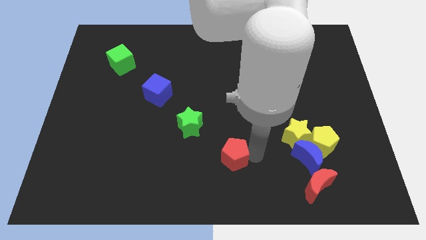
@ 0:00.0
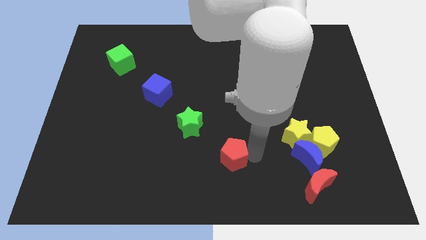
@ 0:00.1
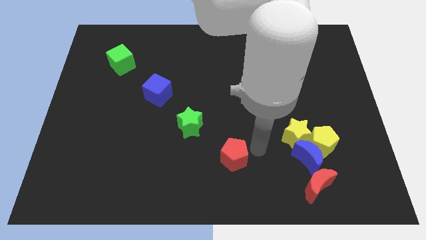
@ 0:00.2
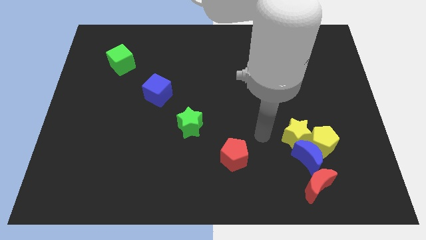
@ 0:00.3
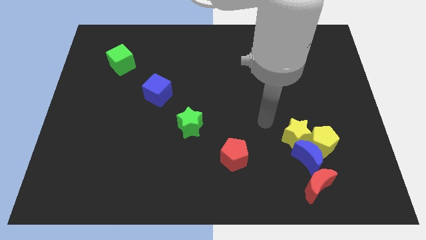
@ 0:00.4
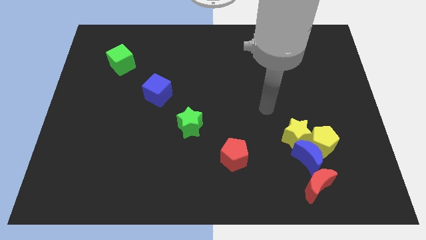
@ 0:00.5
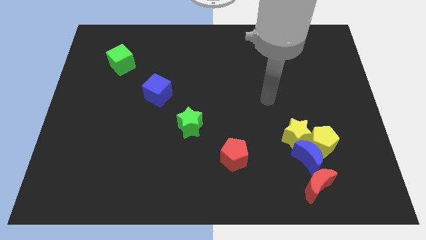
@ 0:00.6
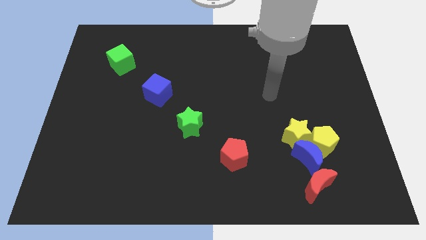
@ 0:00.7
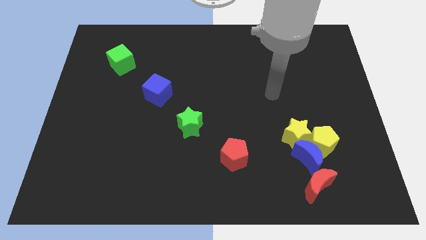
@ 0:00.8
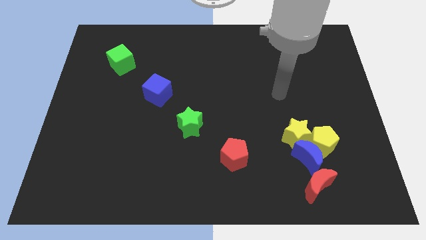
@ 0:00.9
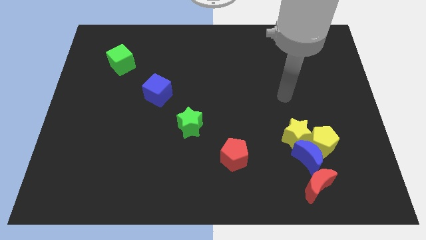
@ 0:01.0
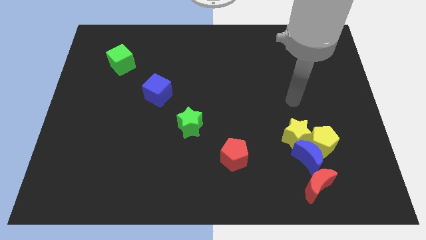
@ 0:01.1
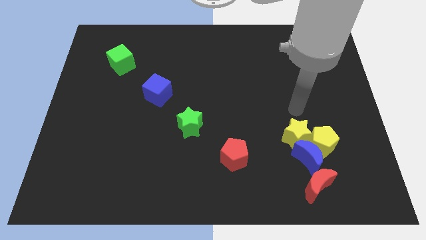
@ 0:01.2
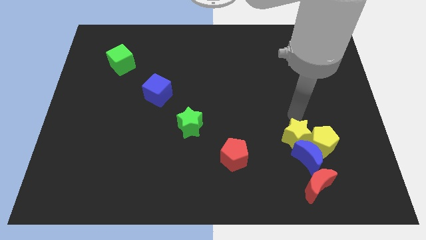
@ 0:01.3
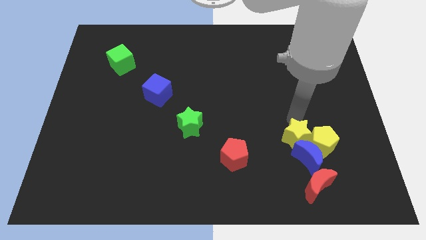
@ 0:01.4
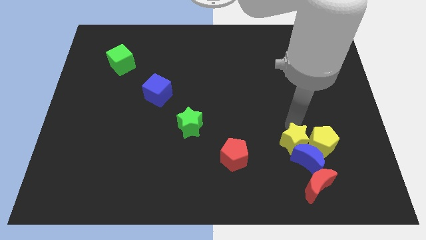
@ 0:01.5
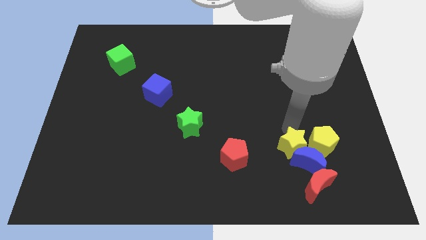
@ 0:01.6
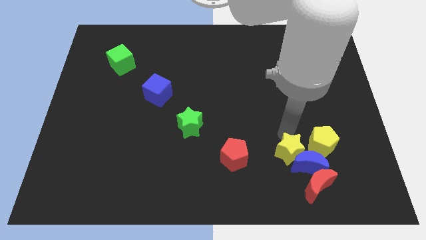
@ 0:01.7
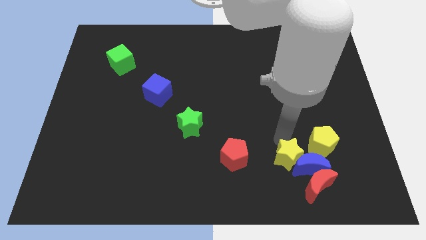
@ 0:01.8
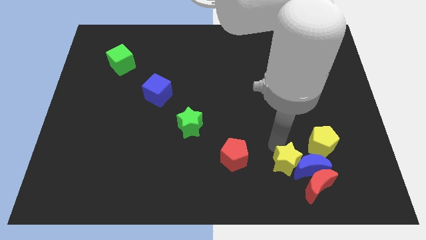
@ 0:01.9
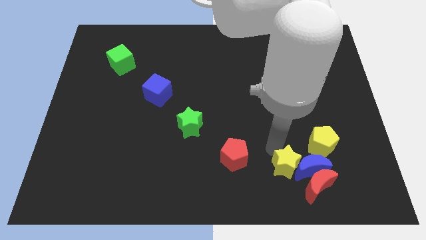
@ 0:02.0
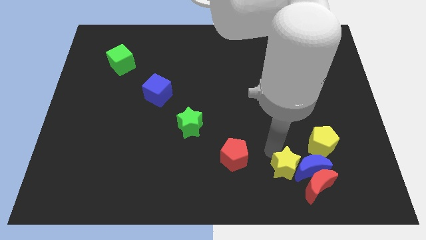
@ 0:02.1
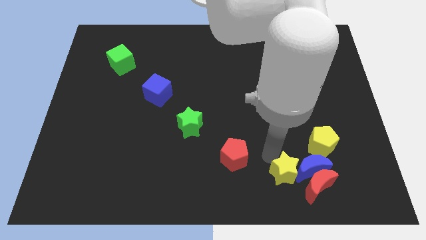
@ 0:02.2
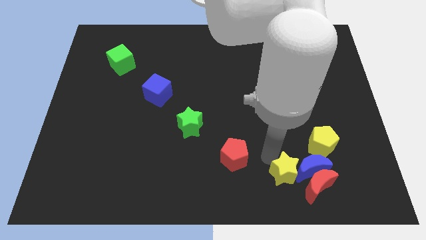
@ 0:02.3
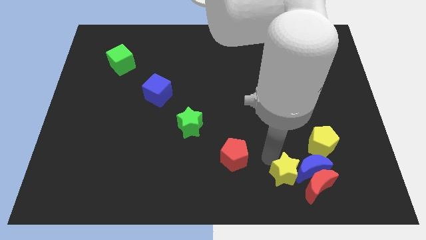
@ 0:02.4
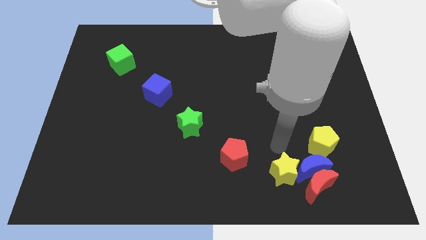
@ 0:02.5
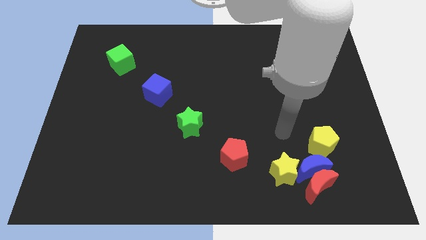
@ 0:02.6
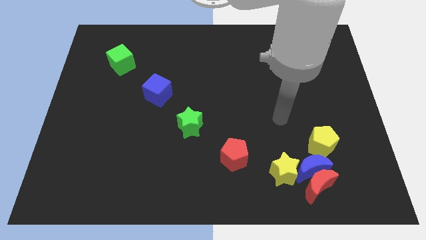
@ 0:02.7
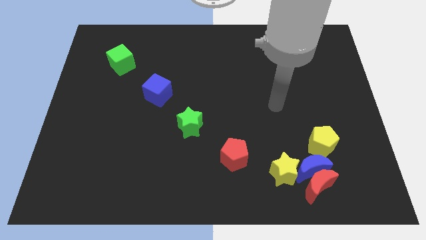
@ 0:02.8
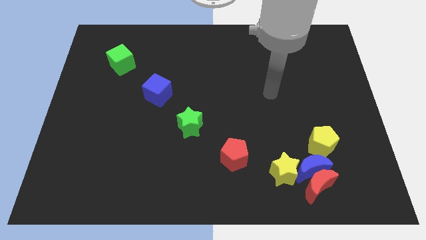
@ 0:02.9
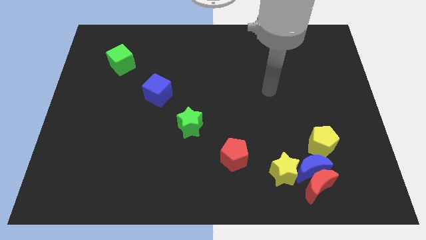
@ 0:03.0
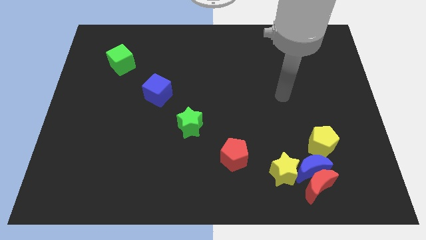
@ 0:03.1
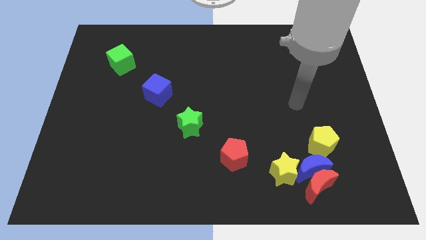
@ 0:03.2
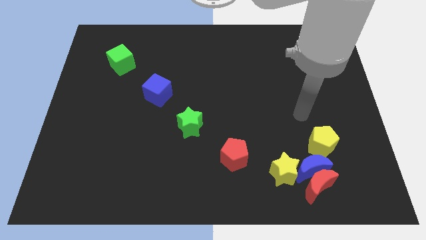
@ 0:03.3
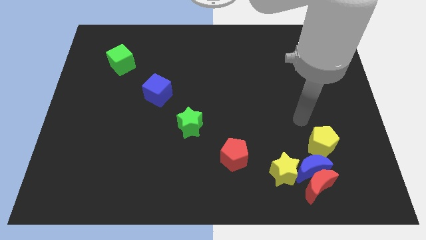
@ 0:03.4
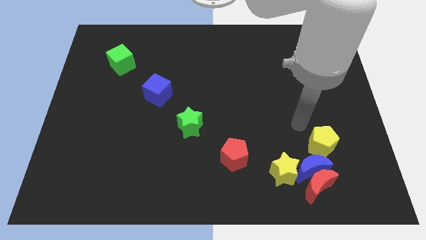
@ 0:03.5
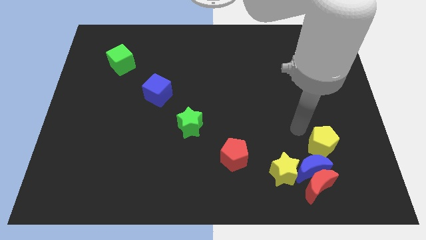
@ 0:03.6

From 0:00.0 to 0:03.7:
push the yellow star to the left of the blue crescent

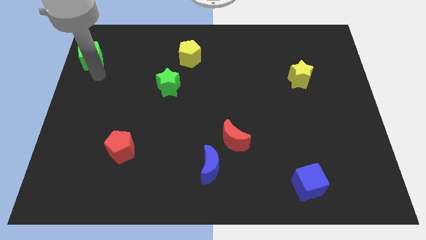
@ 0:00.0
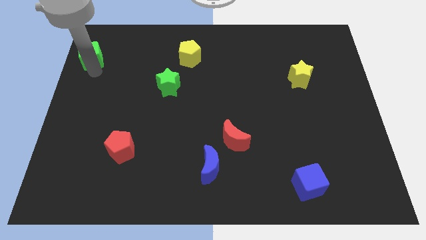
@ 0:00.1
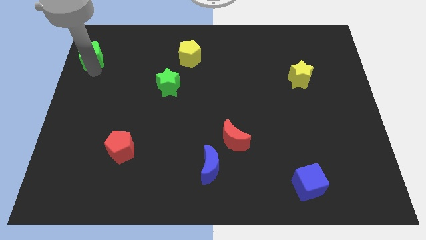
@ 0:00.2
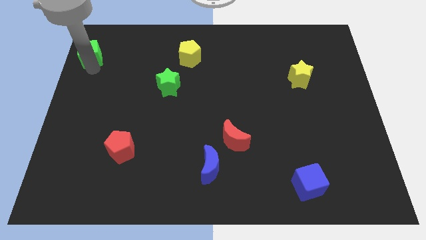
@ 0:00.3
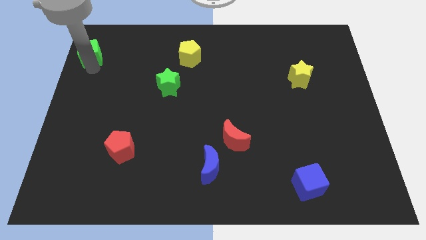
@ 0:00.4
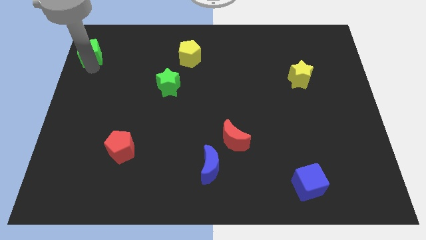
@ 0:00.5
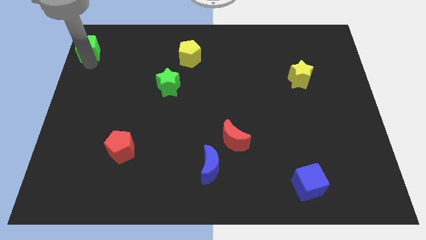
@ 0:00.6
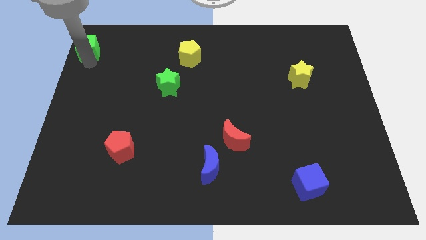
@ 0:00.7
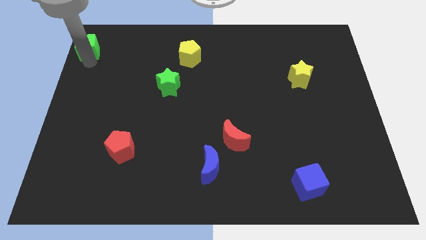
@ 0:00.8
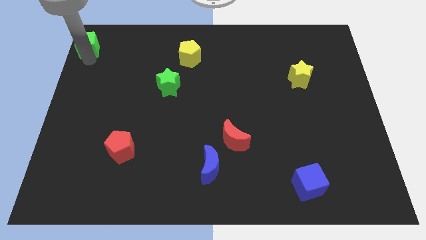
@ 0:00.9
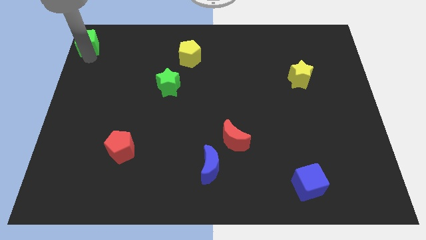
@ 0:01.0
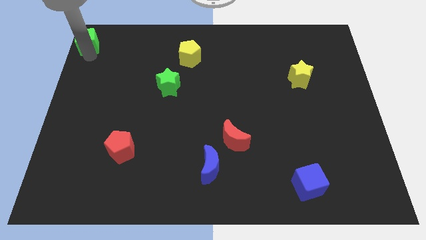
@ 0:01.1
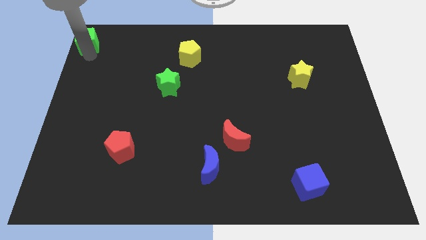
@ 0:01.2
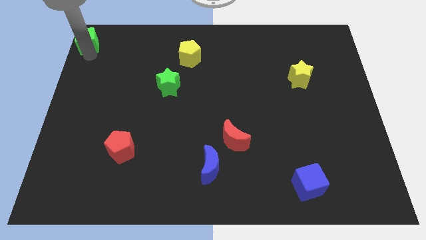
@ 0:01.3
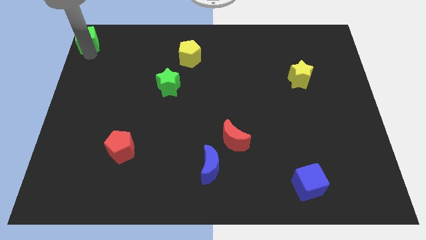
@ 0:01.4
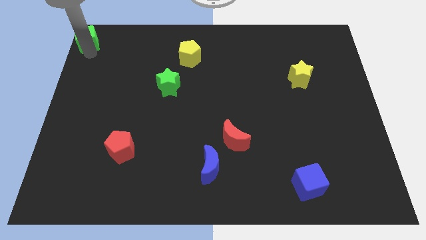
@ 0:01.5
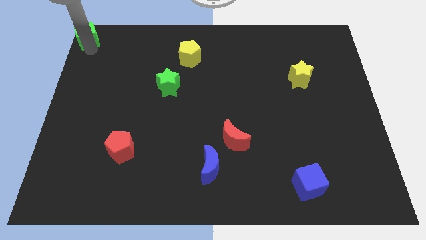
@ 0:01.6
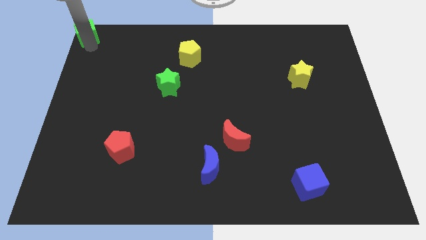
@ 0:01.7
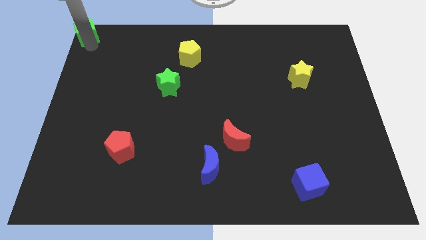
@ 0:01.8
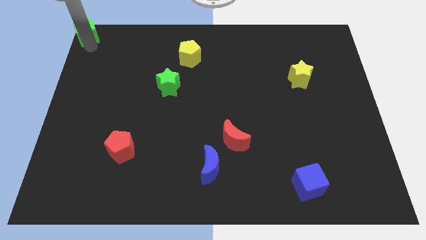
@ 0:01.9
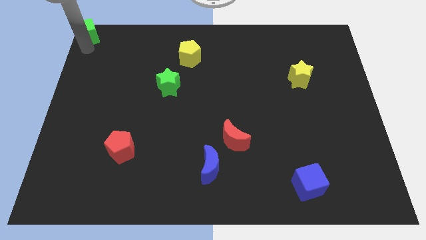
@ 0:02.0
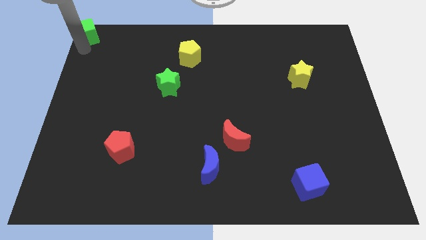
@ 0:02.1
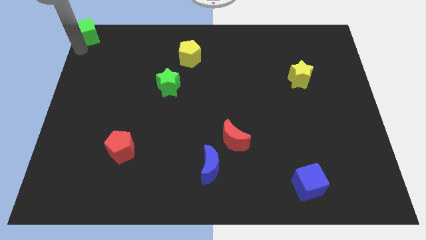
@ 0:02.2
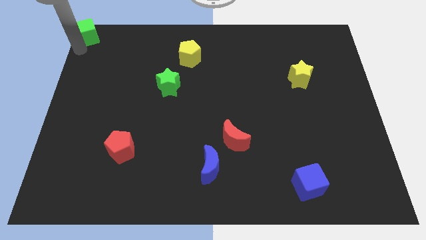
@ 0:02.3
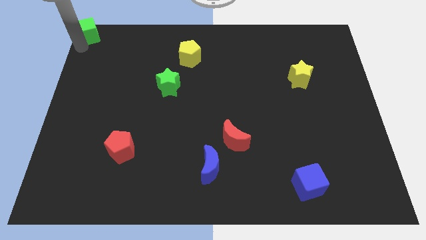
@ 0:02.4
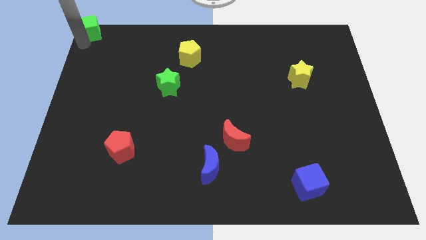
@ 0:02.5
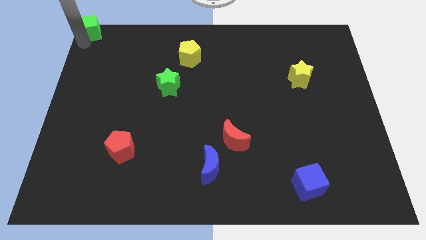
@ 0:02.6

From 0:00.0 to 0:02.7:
move the green cube to the top left corner of the board

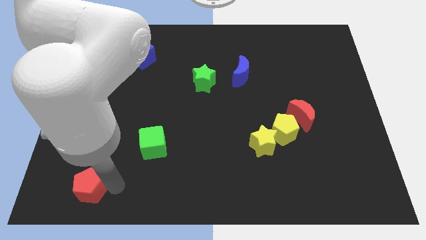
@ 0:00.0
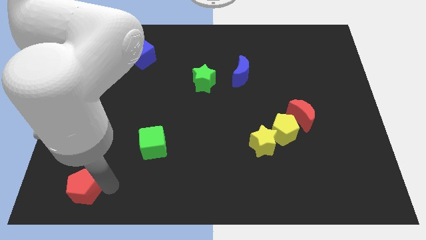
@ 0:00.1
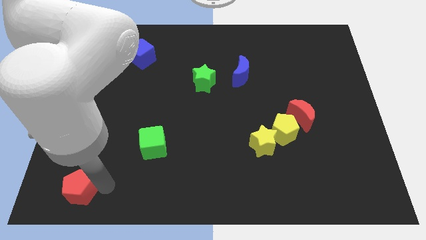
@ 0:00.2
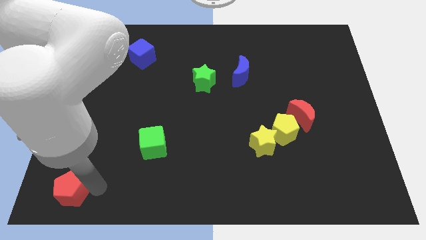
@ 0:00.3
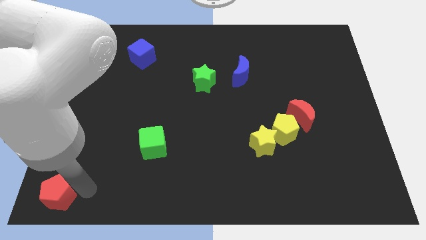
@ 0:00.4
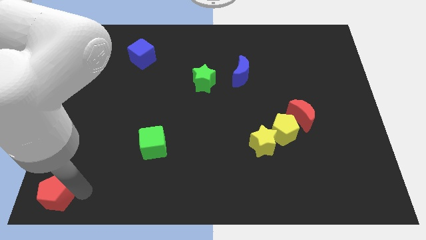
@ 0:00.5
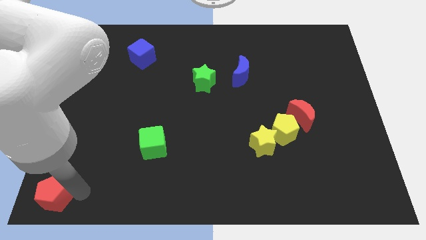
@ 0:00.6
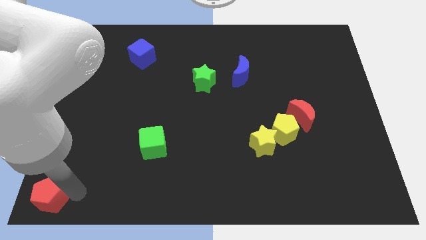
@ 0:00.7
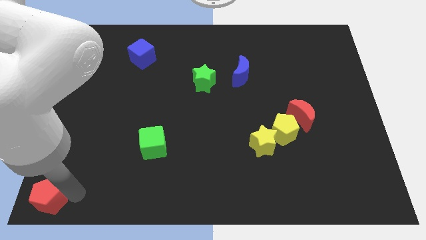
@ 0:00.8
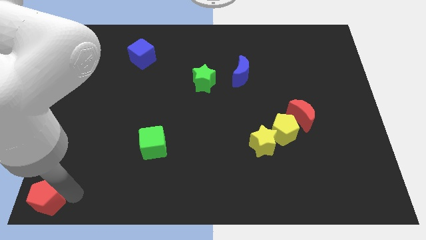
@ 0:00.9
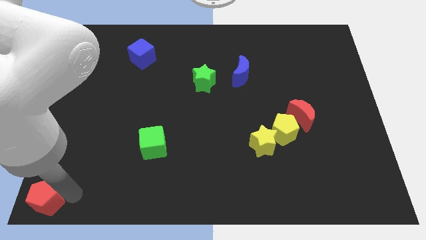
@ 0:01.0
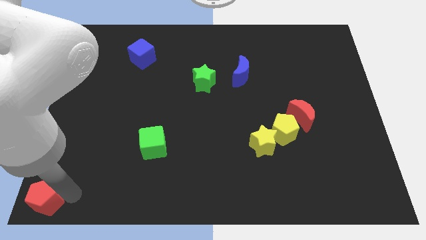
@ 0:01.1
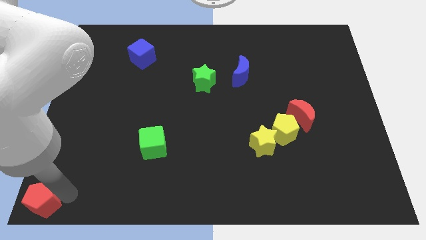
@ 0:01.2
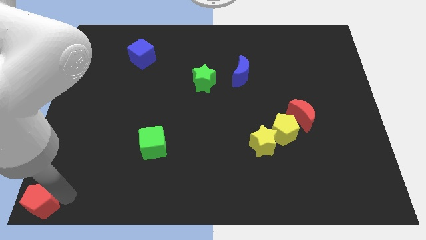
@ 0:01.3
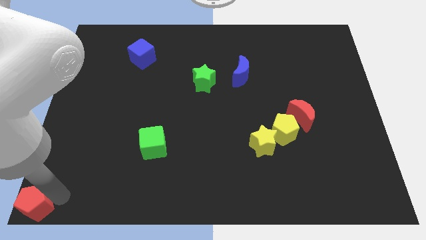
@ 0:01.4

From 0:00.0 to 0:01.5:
place the red pentagon at bottom left side of the board

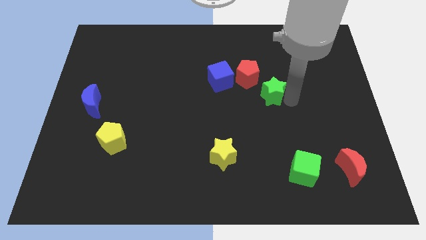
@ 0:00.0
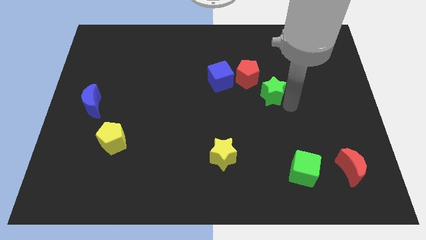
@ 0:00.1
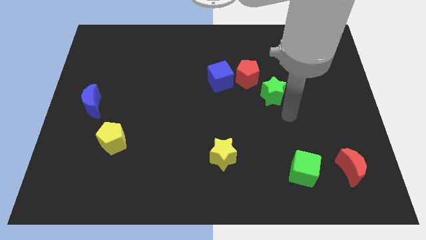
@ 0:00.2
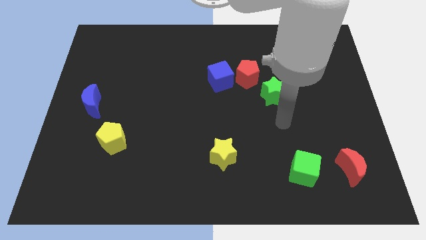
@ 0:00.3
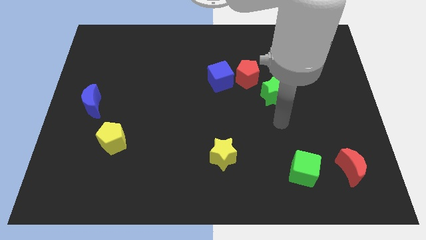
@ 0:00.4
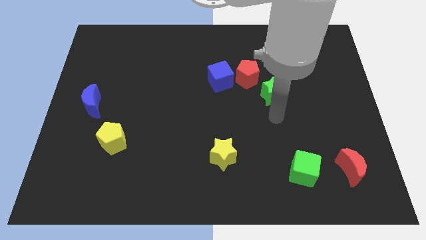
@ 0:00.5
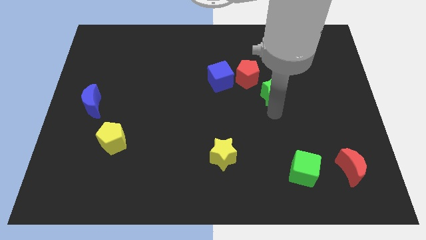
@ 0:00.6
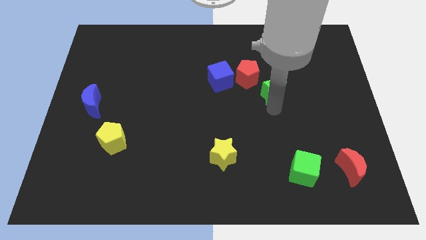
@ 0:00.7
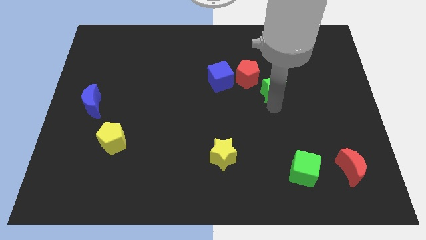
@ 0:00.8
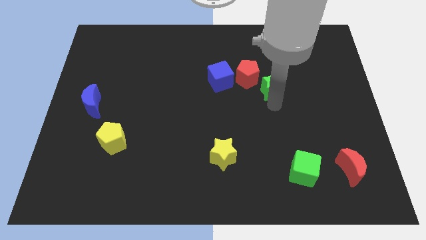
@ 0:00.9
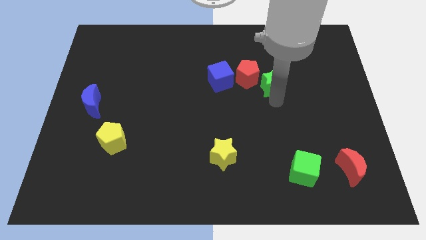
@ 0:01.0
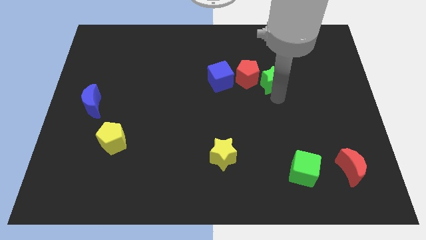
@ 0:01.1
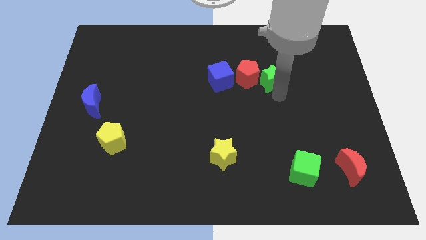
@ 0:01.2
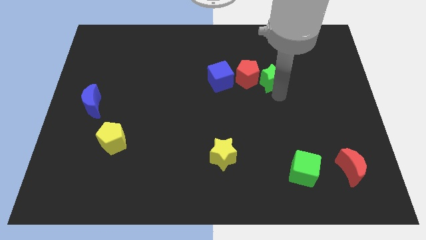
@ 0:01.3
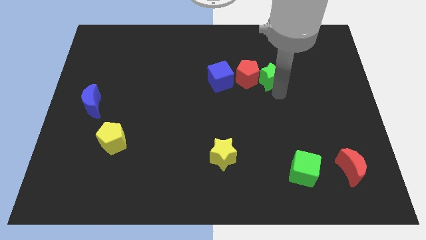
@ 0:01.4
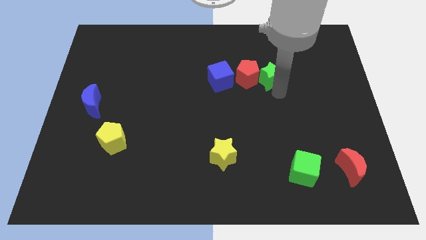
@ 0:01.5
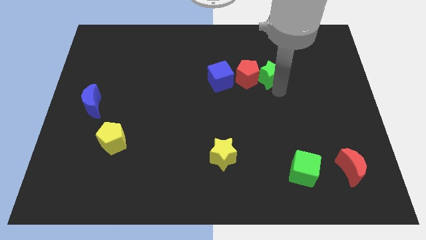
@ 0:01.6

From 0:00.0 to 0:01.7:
push the green star to the right of red pentagon
